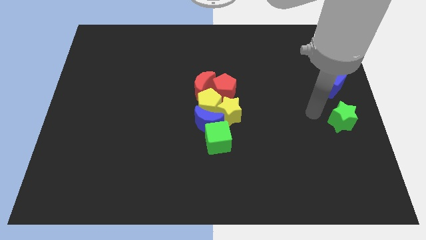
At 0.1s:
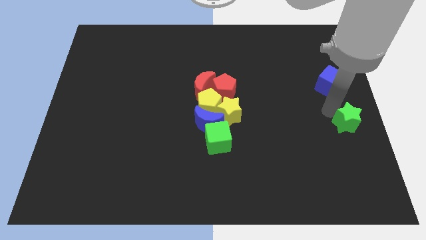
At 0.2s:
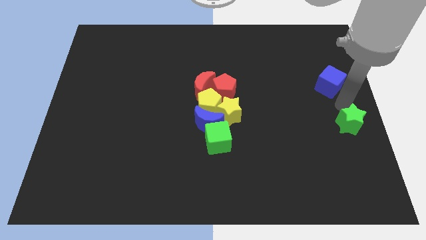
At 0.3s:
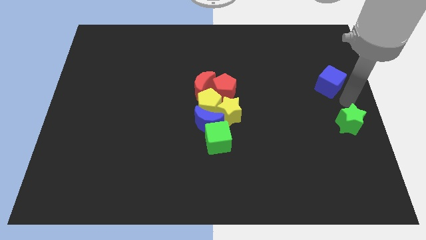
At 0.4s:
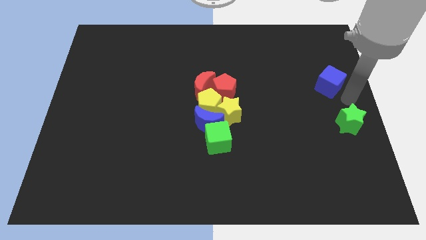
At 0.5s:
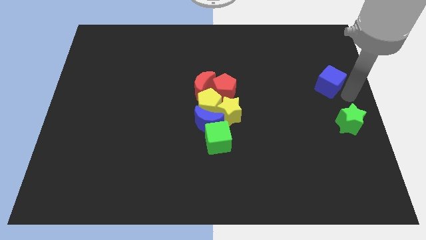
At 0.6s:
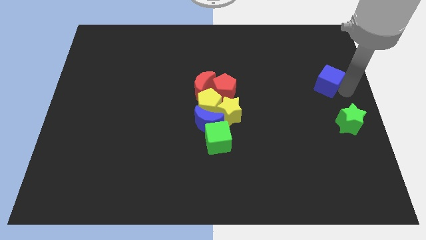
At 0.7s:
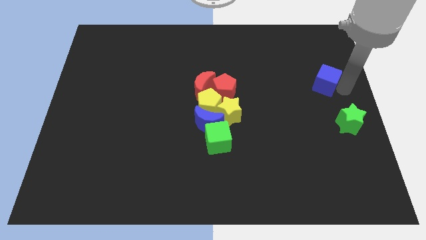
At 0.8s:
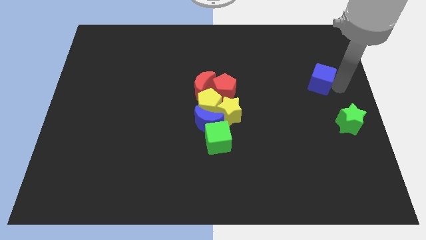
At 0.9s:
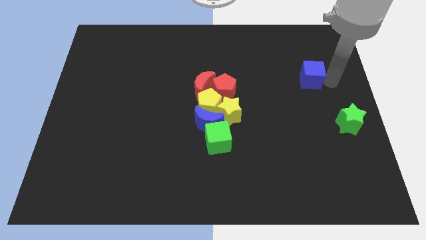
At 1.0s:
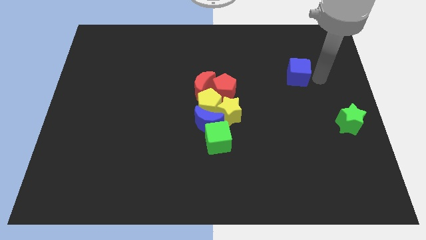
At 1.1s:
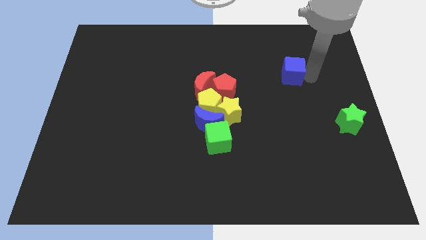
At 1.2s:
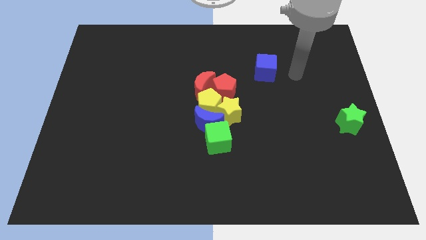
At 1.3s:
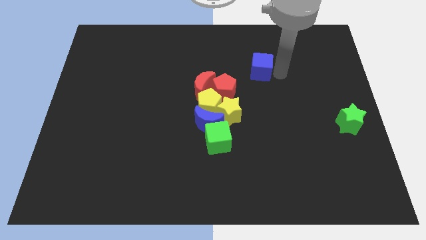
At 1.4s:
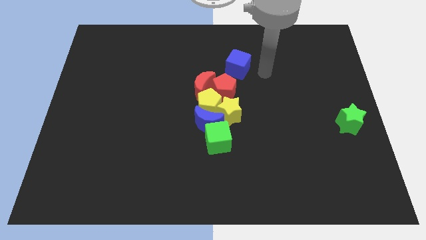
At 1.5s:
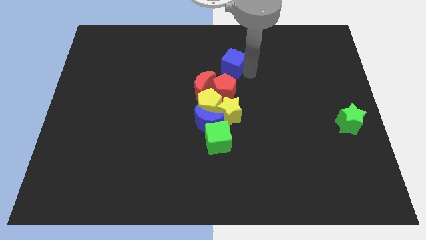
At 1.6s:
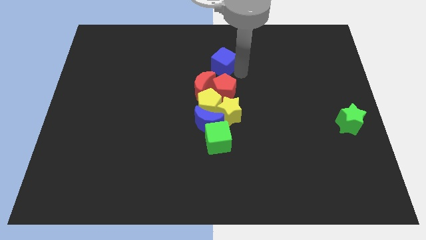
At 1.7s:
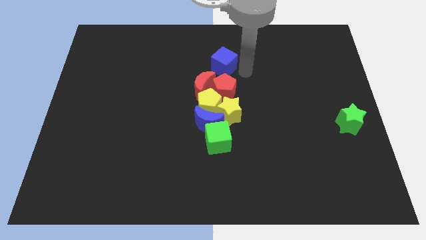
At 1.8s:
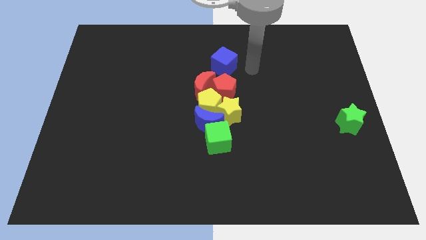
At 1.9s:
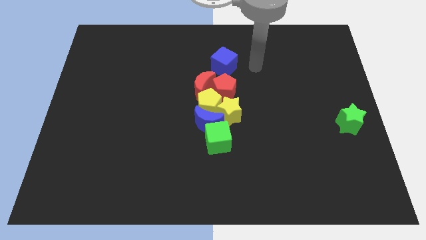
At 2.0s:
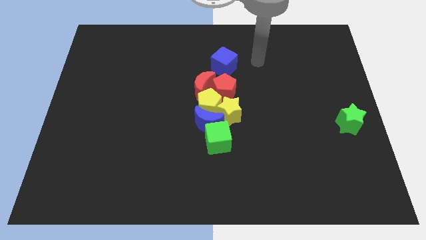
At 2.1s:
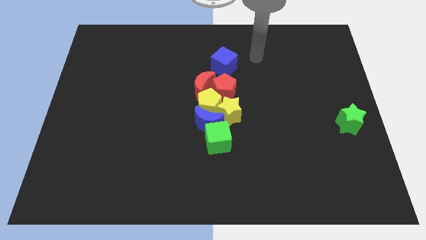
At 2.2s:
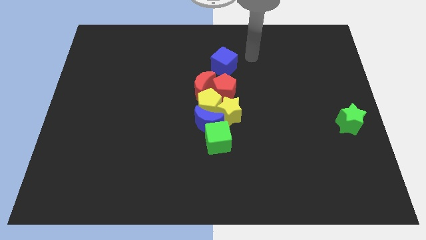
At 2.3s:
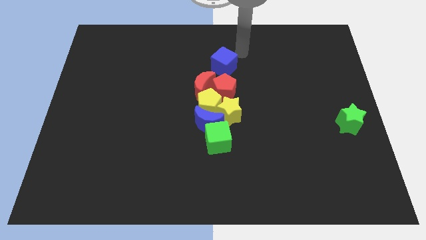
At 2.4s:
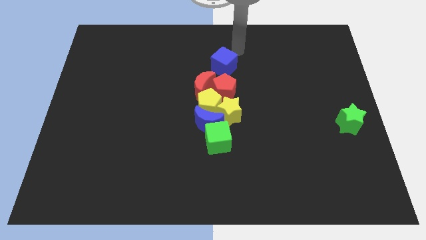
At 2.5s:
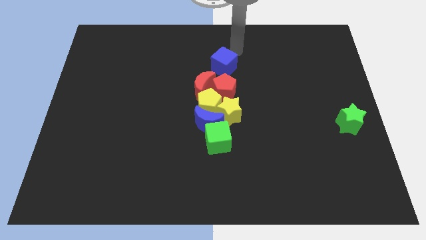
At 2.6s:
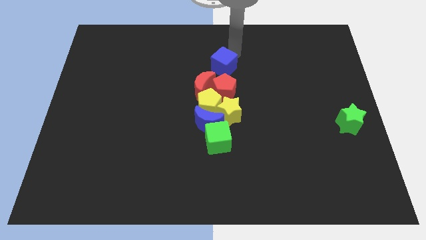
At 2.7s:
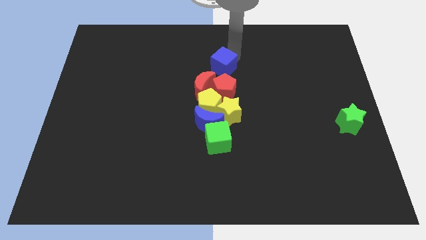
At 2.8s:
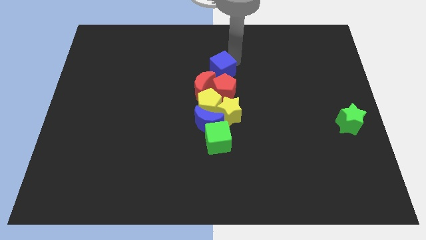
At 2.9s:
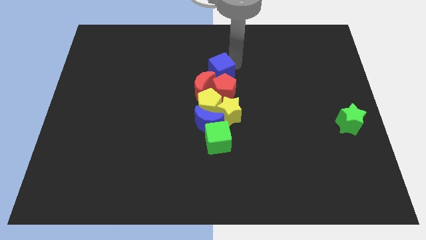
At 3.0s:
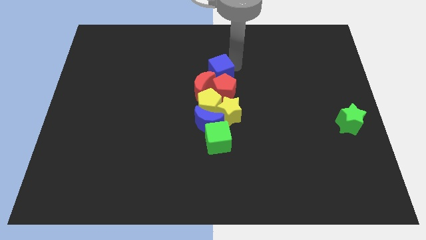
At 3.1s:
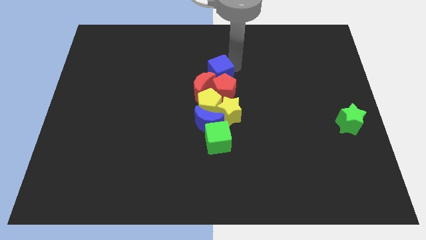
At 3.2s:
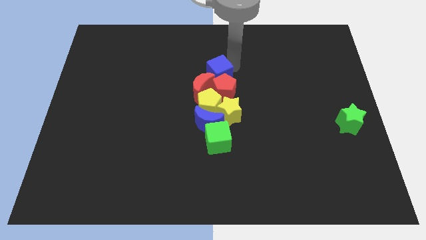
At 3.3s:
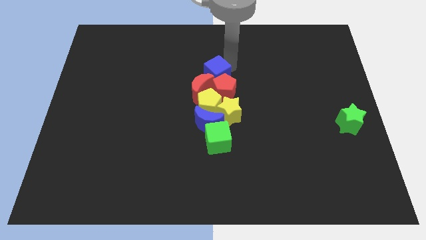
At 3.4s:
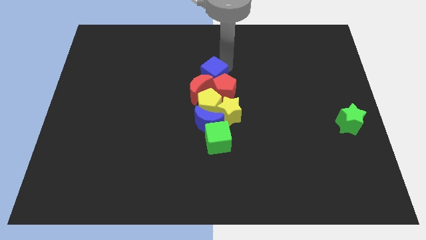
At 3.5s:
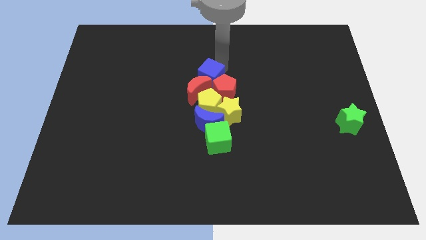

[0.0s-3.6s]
add the blue cube to the group of blocks

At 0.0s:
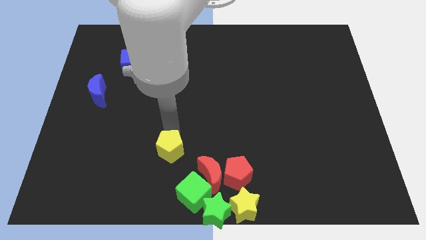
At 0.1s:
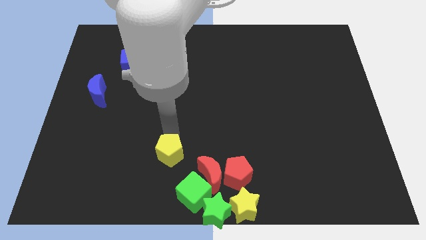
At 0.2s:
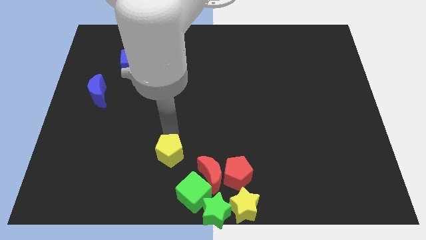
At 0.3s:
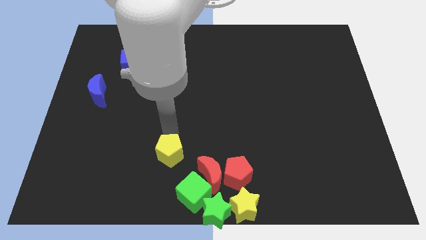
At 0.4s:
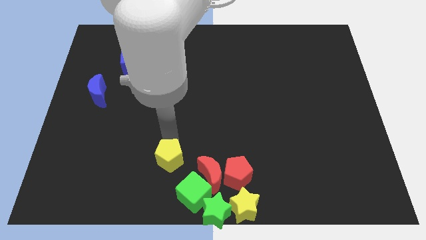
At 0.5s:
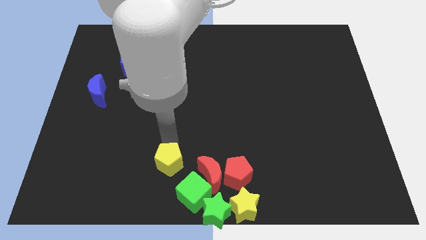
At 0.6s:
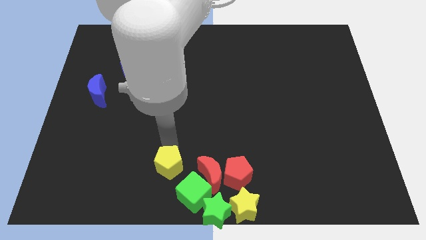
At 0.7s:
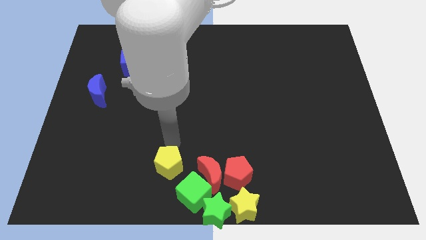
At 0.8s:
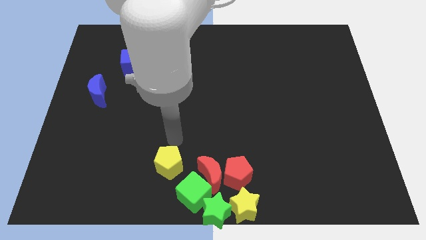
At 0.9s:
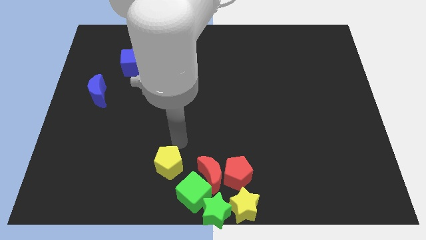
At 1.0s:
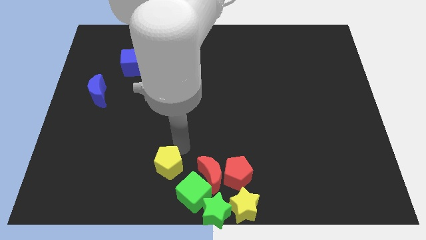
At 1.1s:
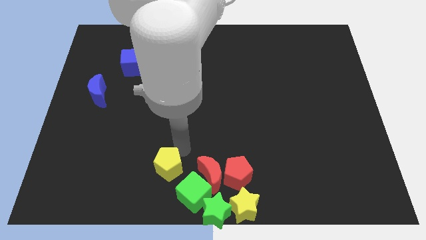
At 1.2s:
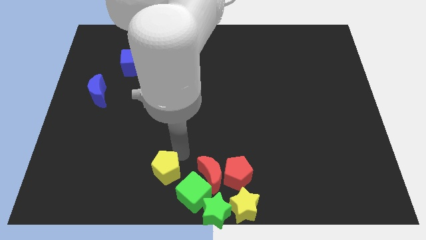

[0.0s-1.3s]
move the yellow pentagon above the green cube

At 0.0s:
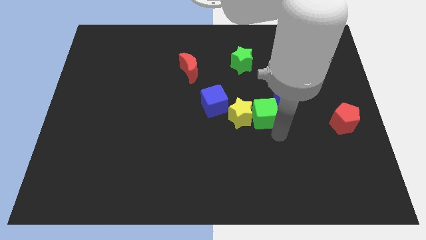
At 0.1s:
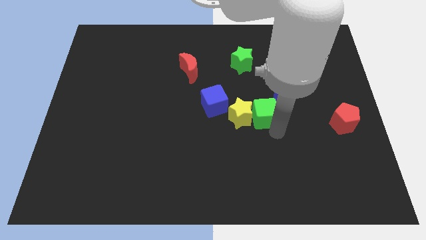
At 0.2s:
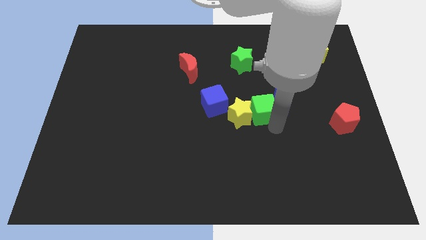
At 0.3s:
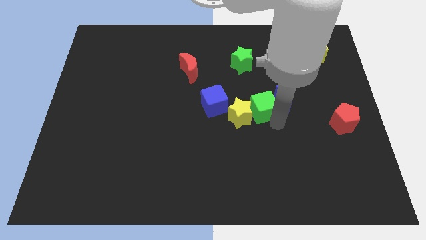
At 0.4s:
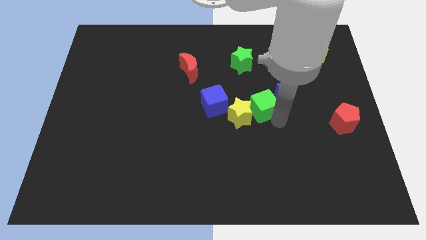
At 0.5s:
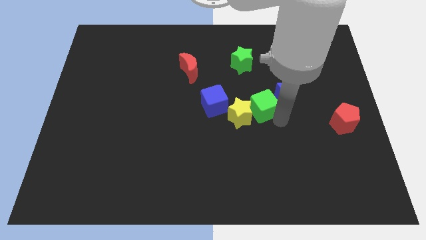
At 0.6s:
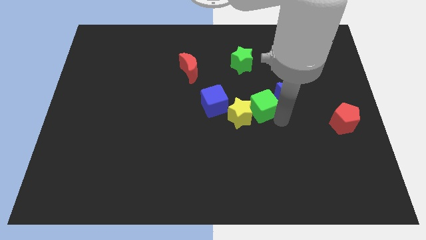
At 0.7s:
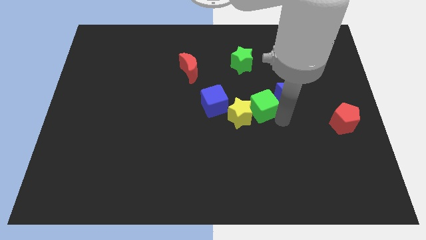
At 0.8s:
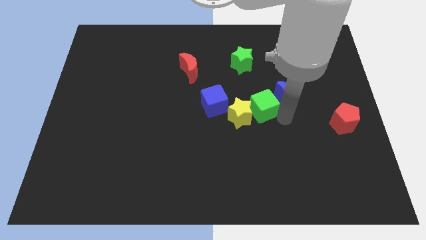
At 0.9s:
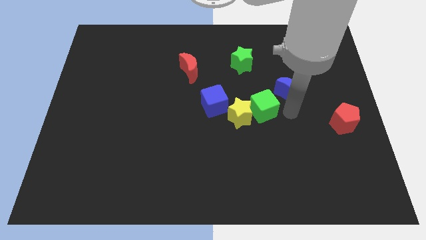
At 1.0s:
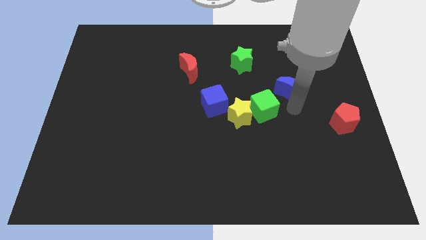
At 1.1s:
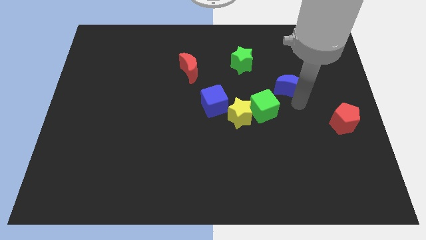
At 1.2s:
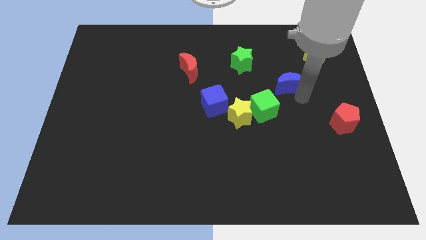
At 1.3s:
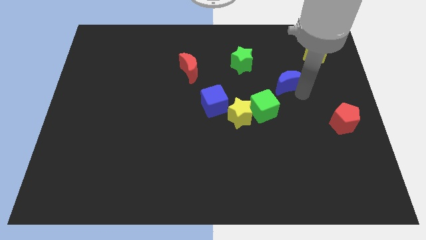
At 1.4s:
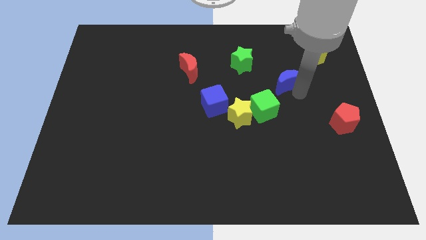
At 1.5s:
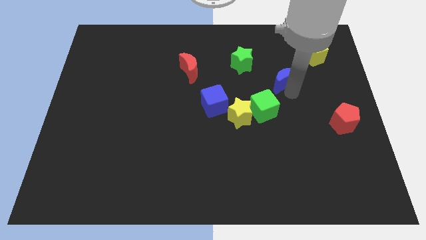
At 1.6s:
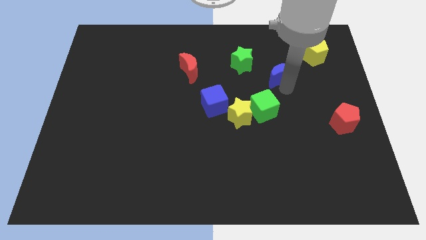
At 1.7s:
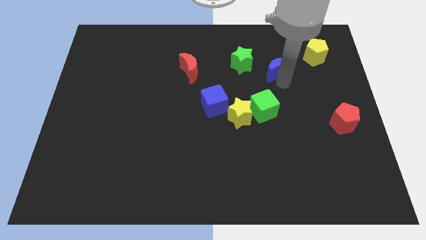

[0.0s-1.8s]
push the blue crescent to the top right of the green cube

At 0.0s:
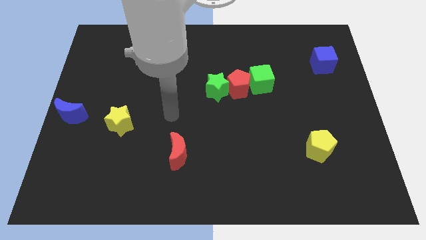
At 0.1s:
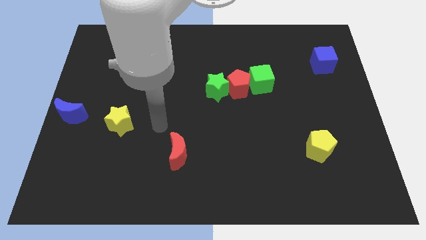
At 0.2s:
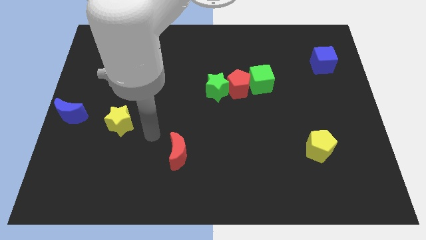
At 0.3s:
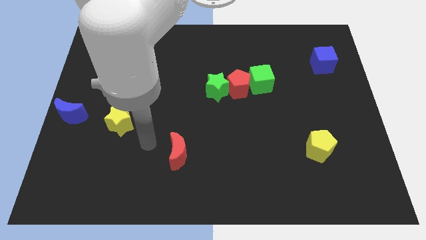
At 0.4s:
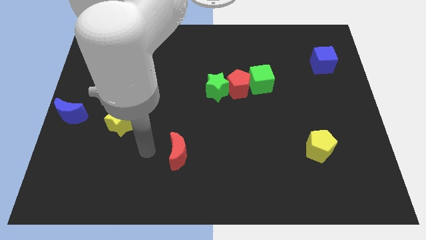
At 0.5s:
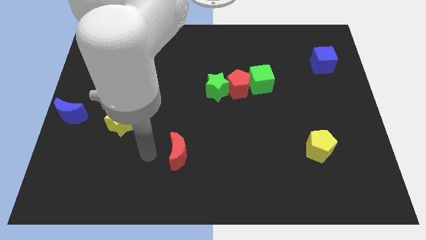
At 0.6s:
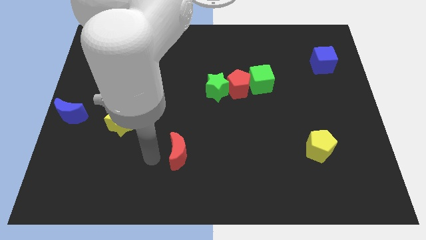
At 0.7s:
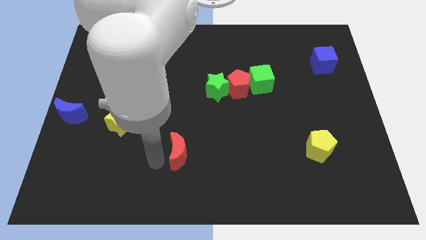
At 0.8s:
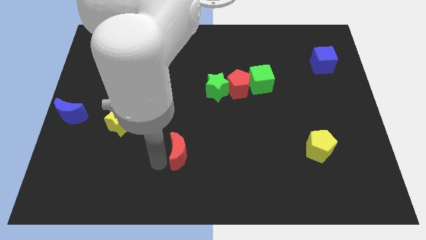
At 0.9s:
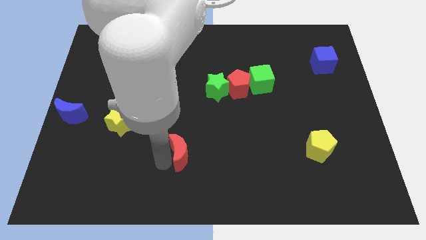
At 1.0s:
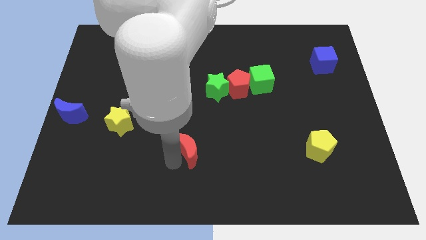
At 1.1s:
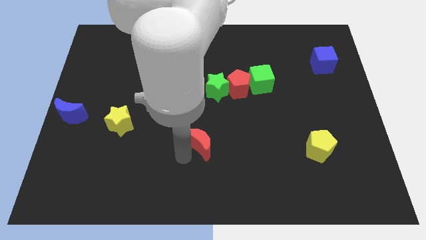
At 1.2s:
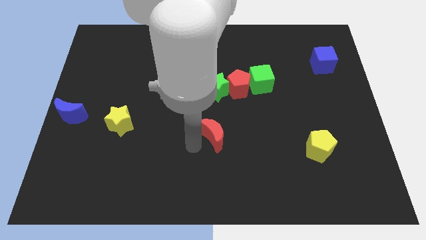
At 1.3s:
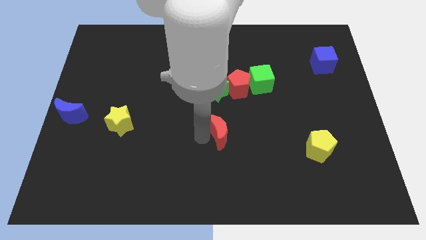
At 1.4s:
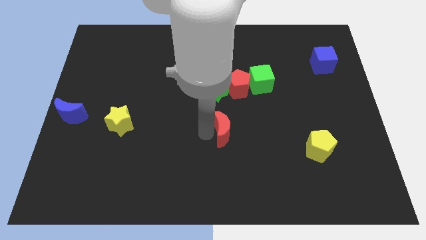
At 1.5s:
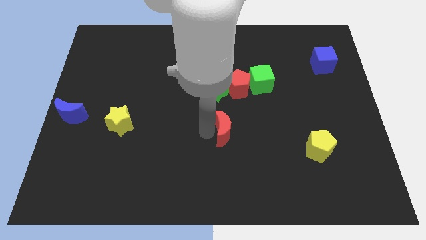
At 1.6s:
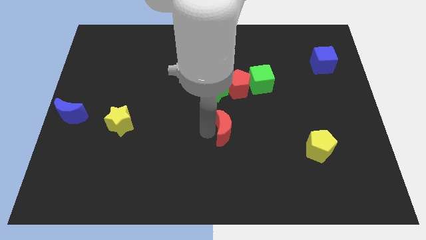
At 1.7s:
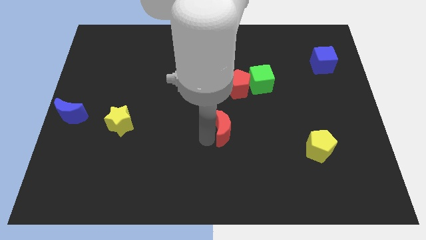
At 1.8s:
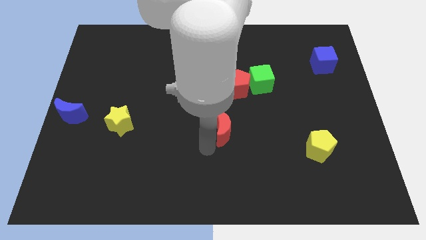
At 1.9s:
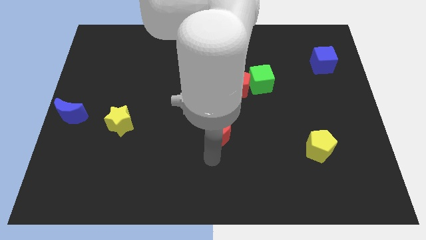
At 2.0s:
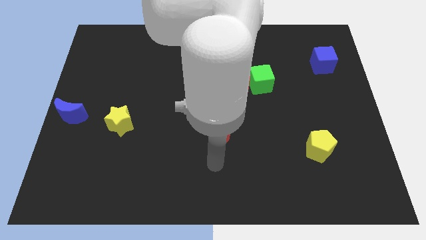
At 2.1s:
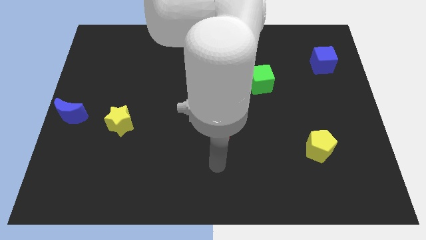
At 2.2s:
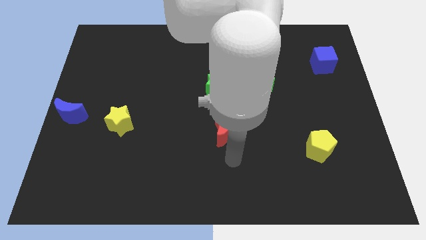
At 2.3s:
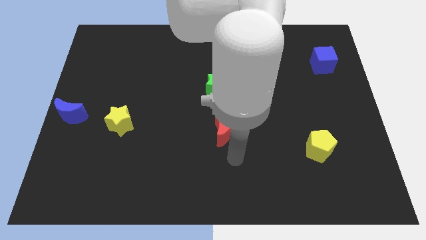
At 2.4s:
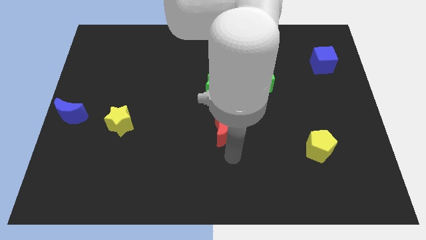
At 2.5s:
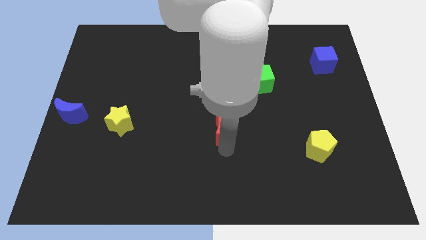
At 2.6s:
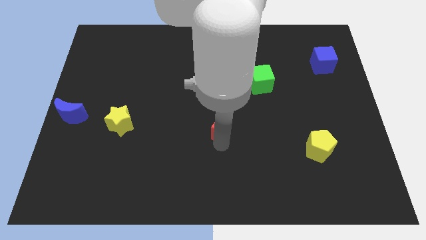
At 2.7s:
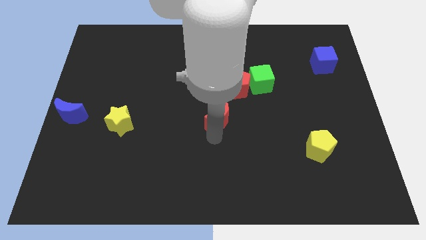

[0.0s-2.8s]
move the red moon below the green star
